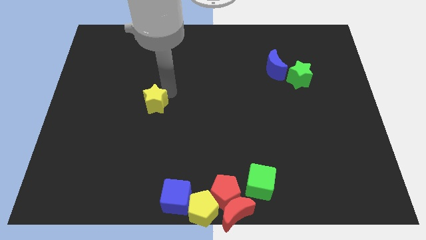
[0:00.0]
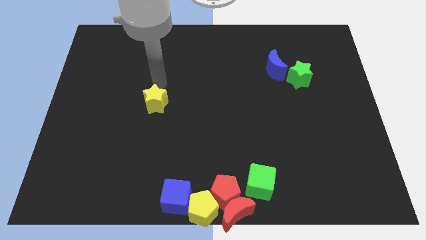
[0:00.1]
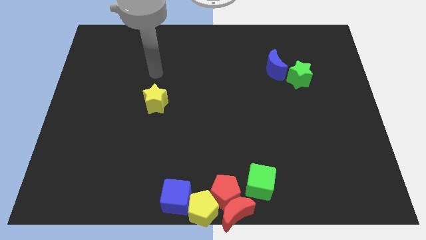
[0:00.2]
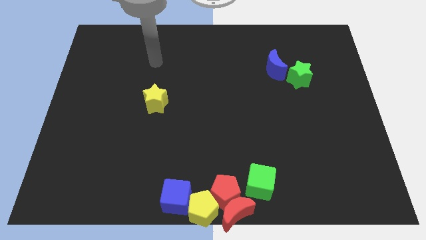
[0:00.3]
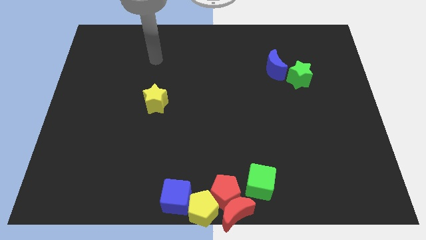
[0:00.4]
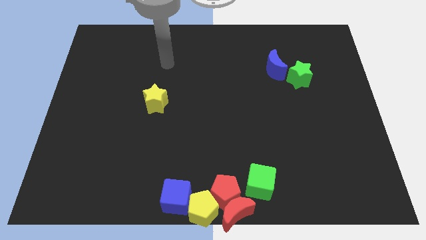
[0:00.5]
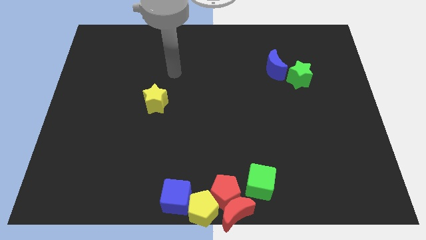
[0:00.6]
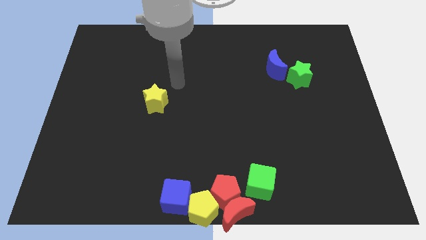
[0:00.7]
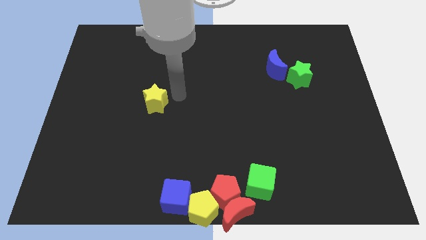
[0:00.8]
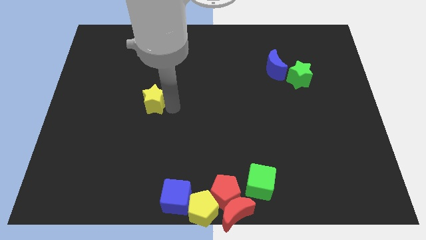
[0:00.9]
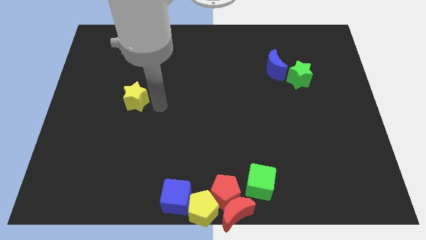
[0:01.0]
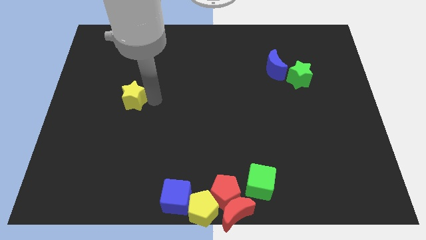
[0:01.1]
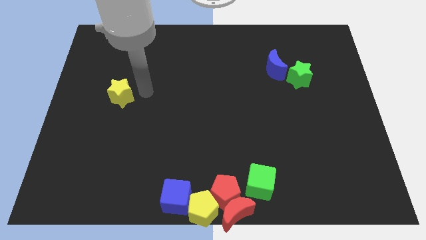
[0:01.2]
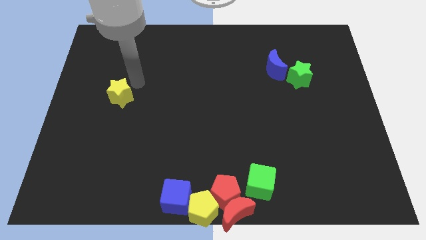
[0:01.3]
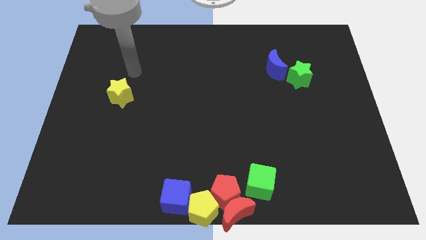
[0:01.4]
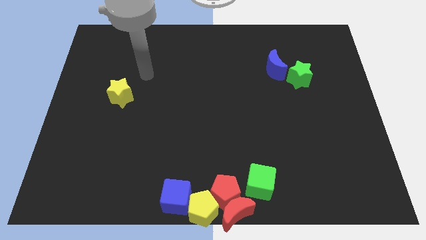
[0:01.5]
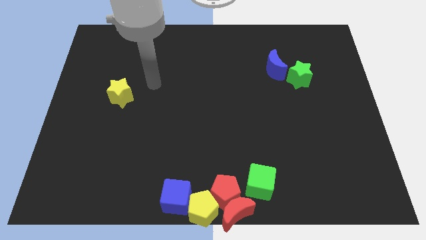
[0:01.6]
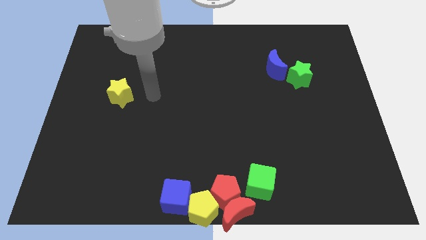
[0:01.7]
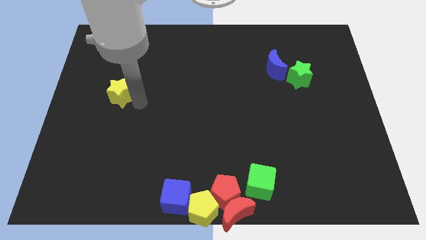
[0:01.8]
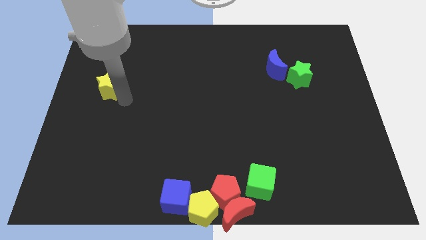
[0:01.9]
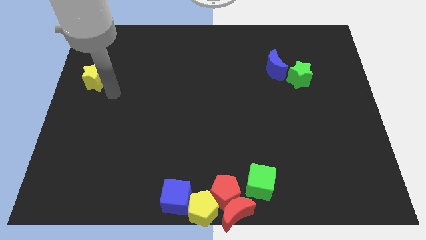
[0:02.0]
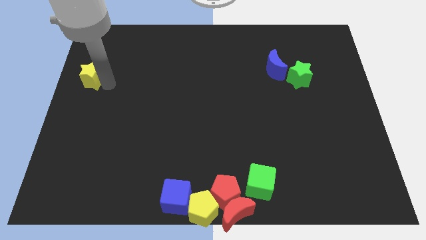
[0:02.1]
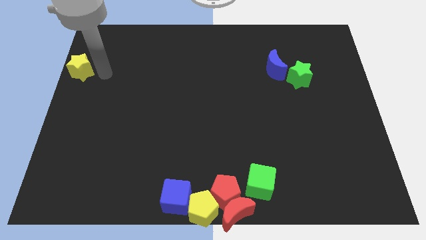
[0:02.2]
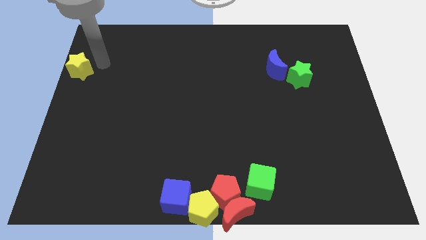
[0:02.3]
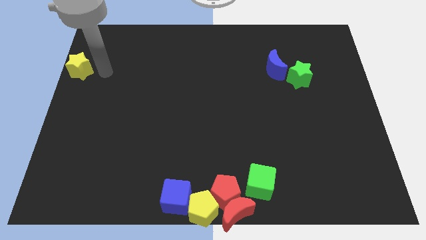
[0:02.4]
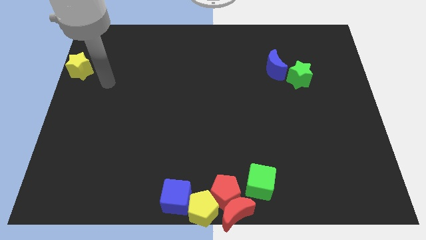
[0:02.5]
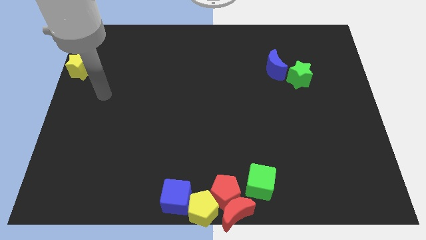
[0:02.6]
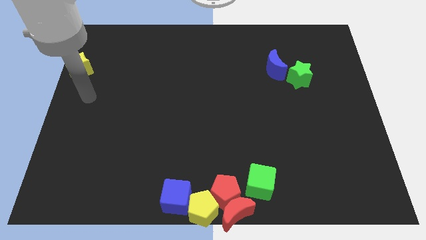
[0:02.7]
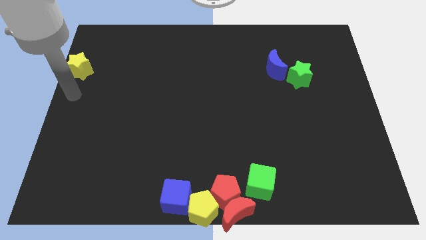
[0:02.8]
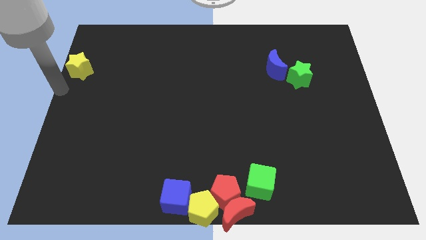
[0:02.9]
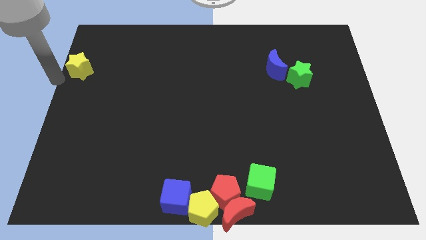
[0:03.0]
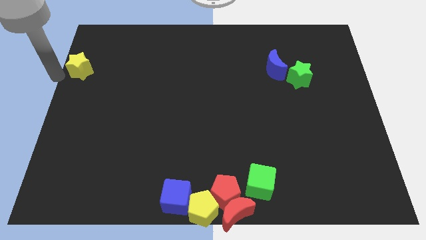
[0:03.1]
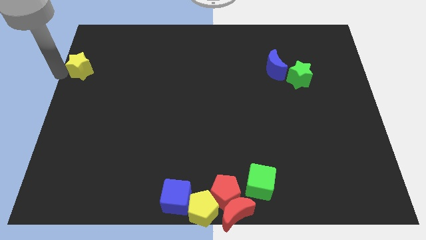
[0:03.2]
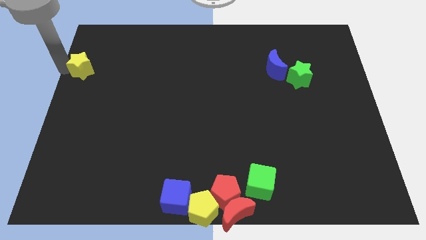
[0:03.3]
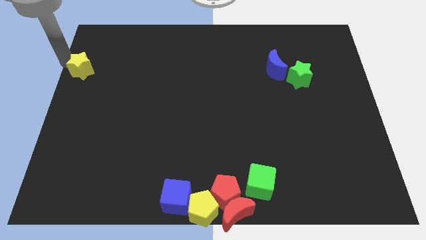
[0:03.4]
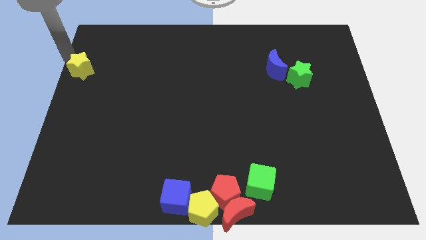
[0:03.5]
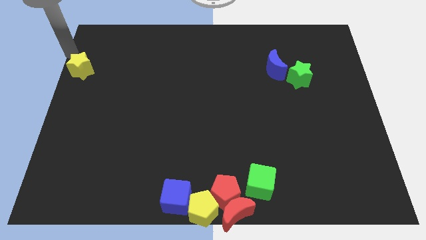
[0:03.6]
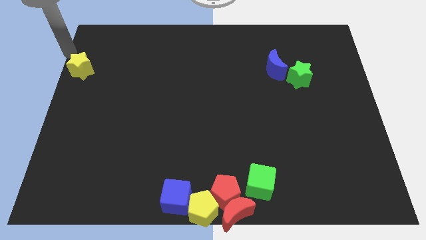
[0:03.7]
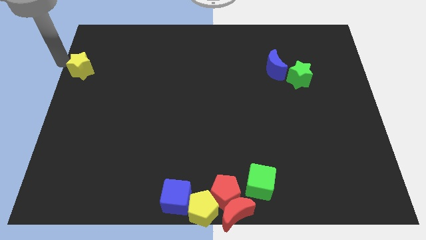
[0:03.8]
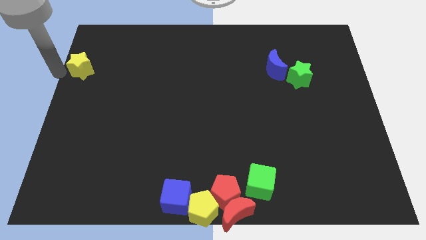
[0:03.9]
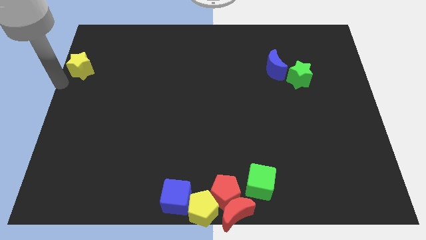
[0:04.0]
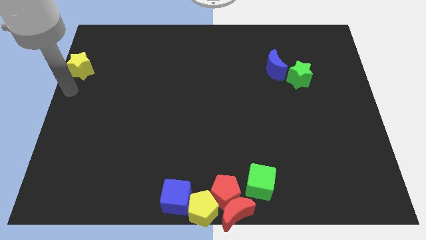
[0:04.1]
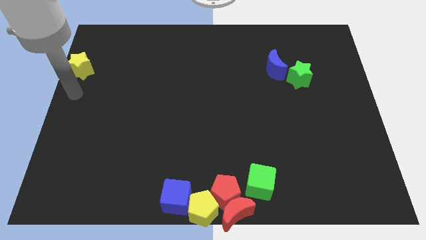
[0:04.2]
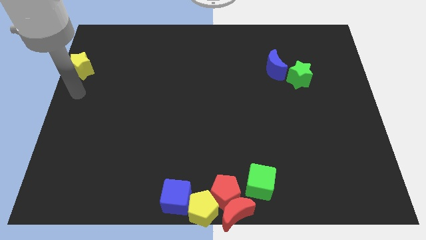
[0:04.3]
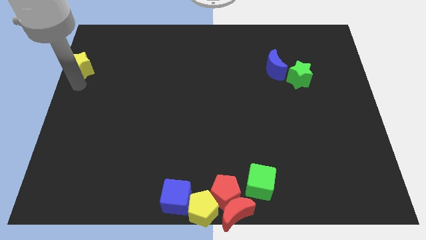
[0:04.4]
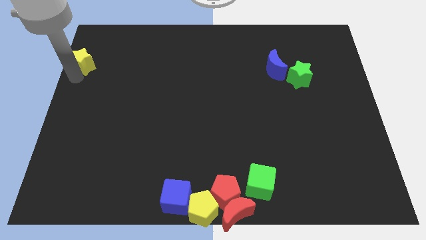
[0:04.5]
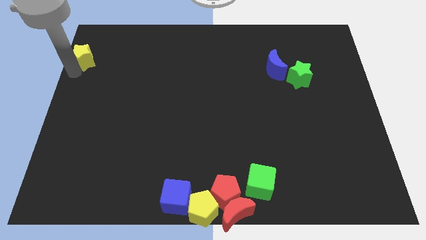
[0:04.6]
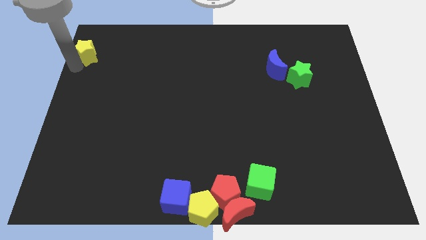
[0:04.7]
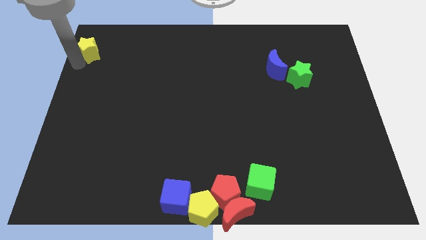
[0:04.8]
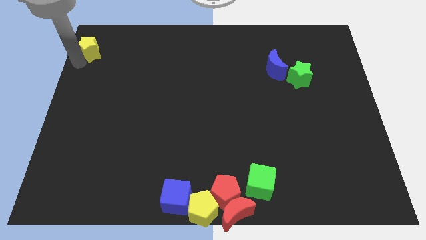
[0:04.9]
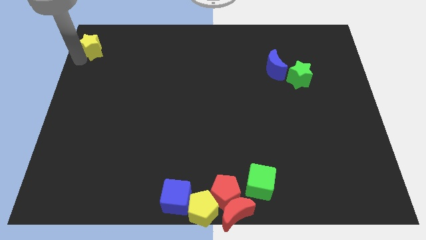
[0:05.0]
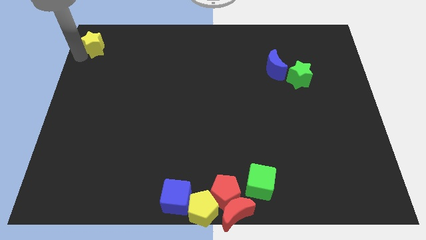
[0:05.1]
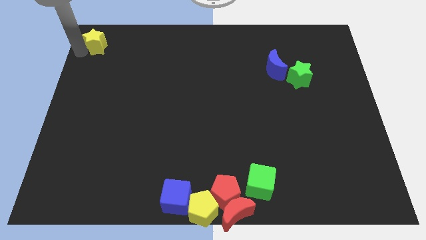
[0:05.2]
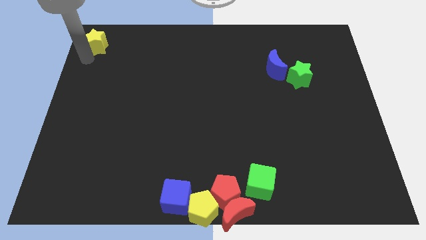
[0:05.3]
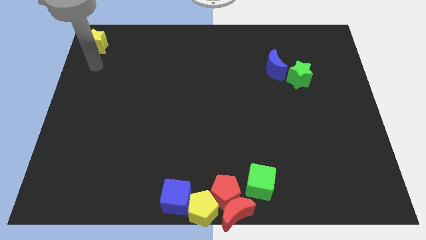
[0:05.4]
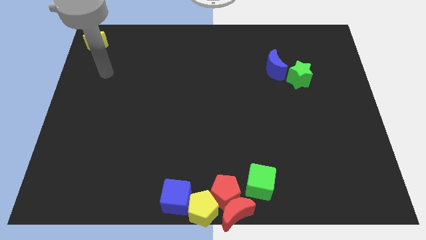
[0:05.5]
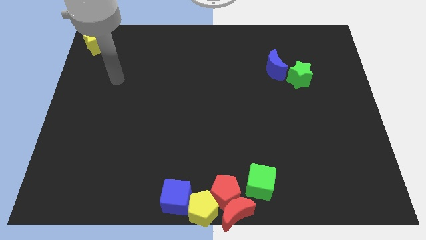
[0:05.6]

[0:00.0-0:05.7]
place the yellow star at the top left corner of the board

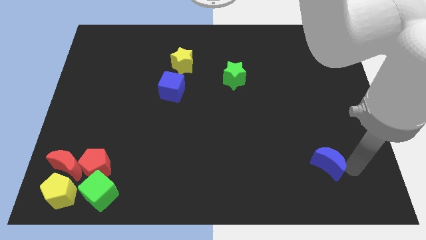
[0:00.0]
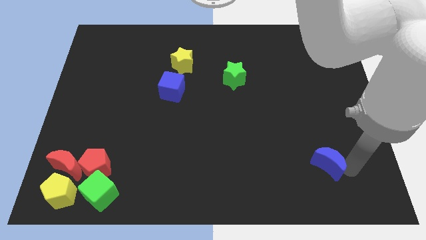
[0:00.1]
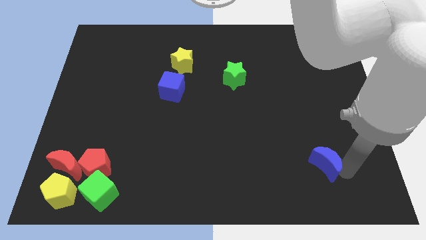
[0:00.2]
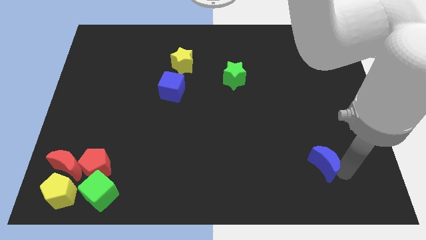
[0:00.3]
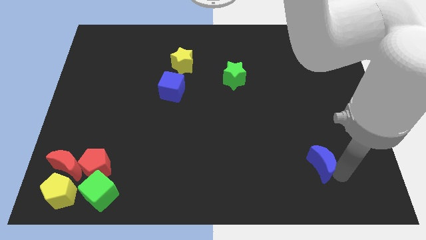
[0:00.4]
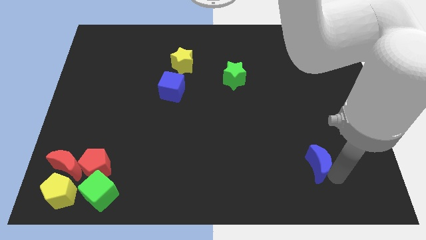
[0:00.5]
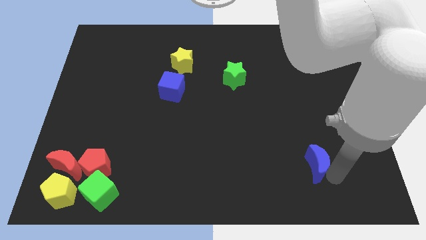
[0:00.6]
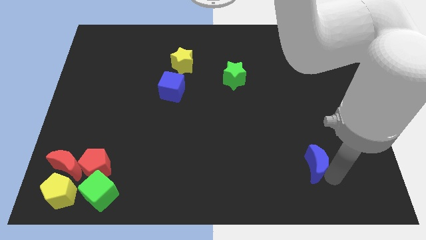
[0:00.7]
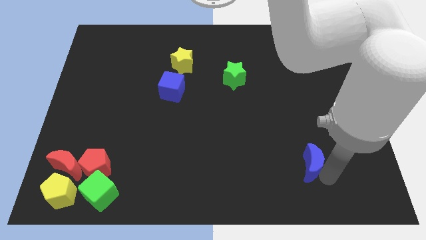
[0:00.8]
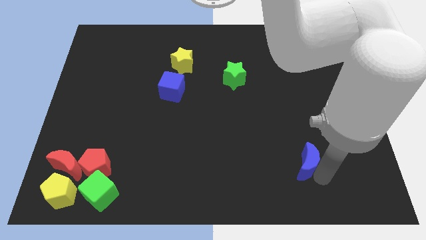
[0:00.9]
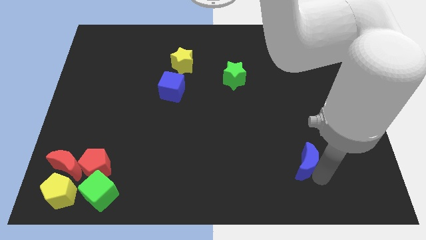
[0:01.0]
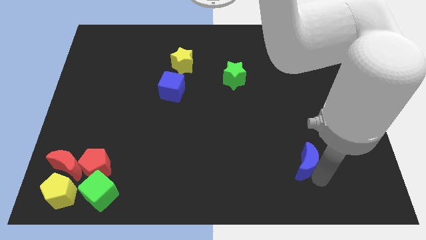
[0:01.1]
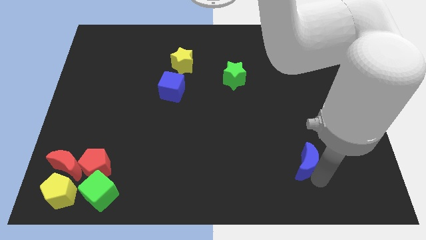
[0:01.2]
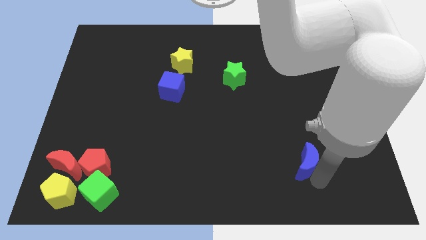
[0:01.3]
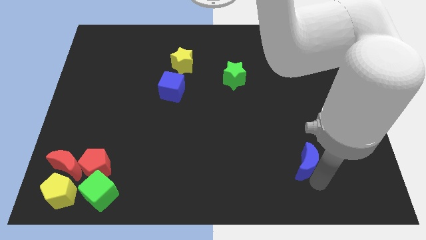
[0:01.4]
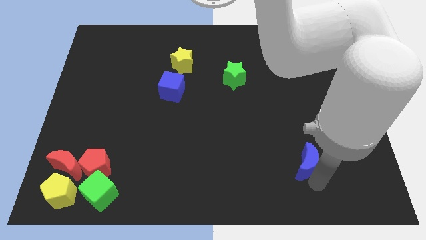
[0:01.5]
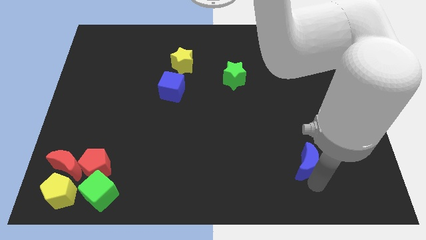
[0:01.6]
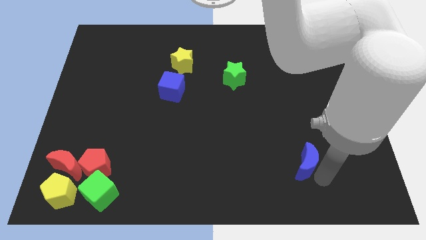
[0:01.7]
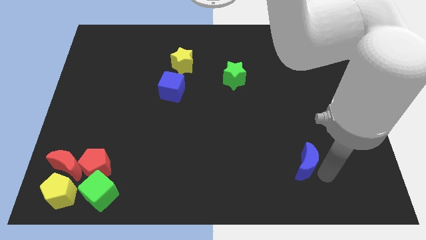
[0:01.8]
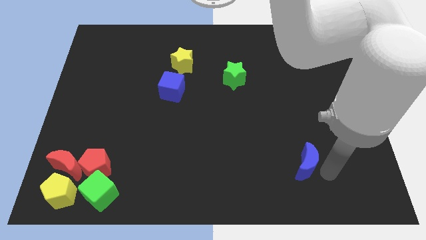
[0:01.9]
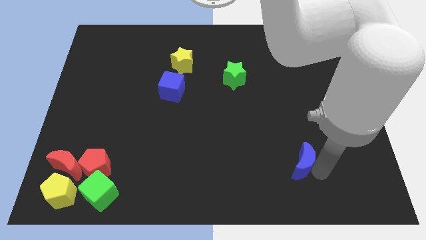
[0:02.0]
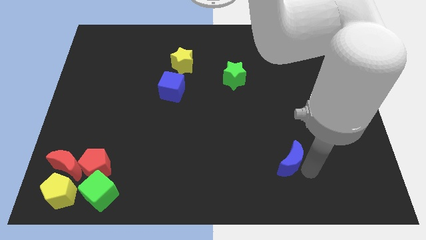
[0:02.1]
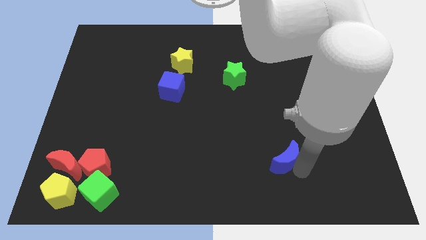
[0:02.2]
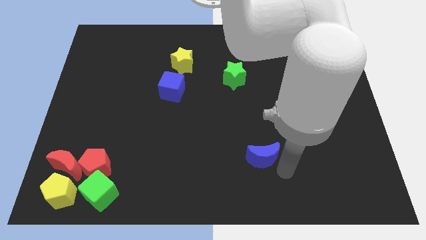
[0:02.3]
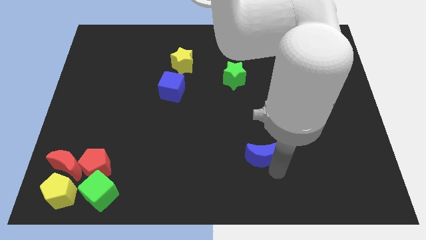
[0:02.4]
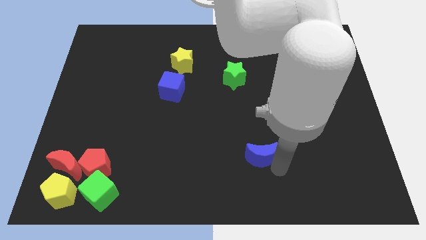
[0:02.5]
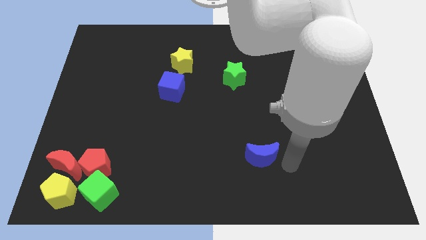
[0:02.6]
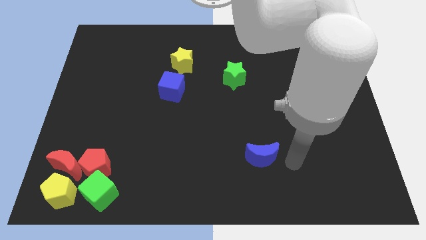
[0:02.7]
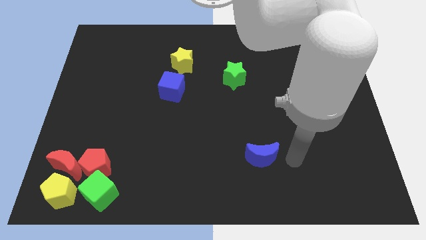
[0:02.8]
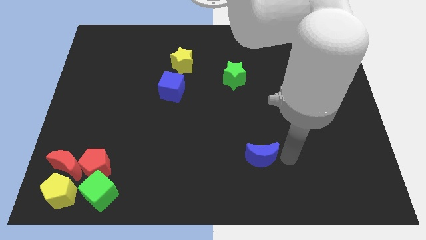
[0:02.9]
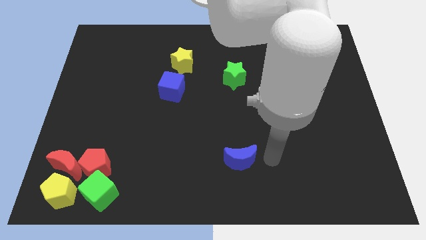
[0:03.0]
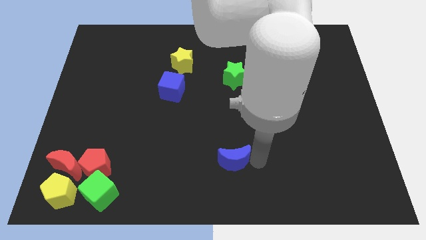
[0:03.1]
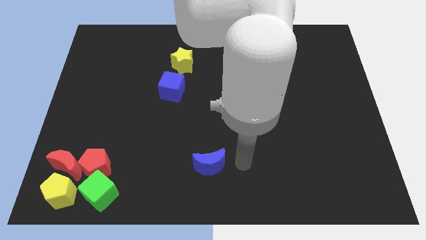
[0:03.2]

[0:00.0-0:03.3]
move the blue crescent towards the bottom centre of the board

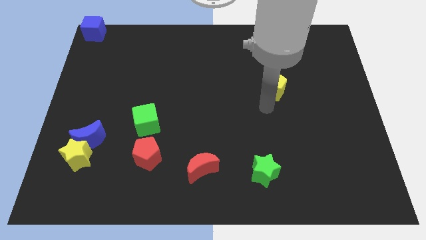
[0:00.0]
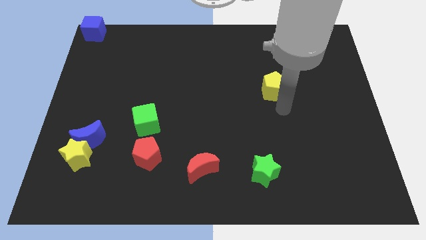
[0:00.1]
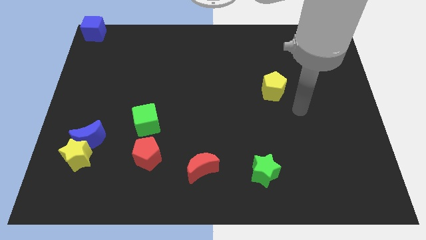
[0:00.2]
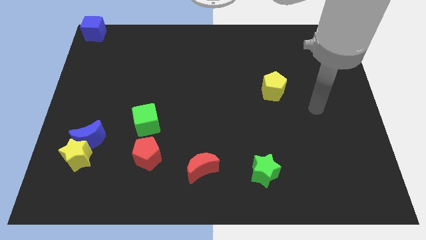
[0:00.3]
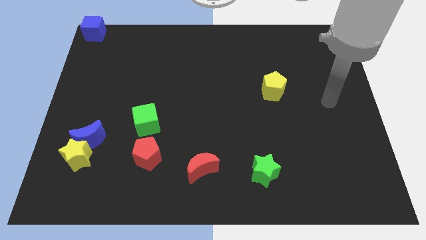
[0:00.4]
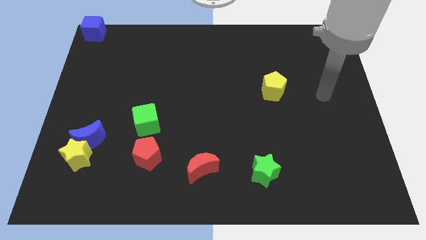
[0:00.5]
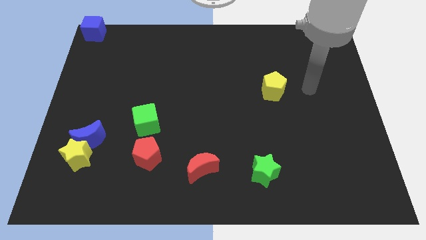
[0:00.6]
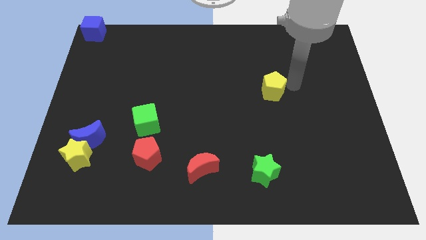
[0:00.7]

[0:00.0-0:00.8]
place arm on right side of yellow pentagon
